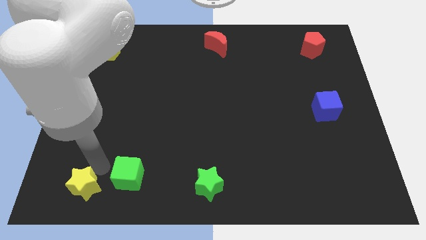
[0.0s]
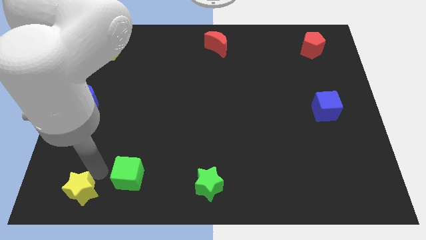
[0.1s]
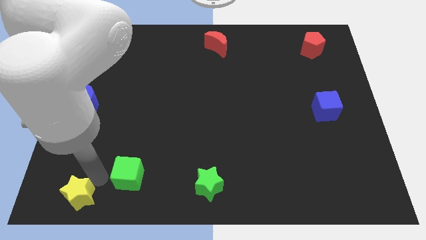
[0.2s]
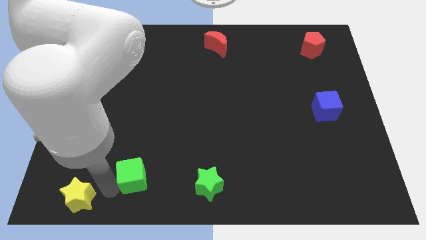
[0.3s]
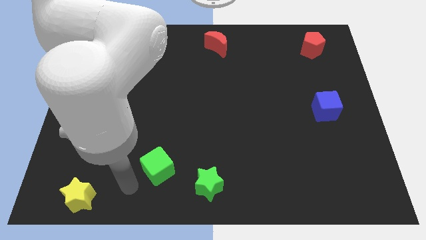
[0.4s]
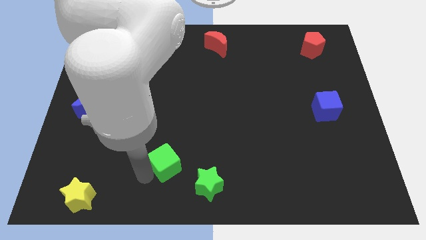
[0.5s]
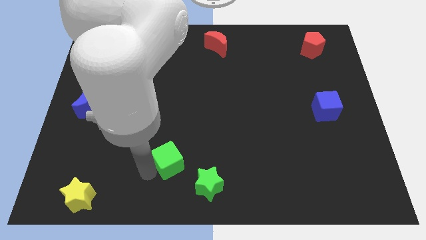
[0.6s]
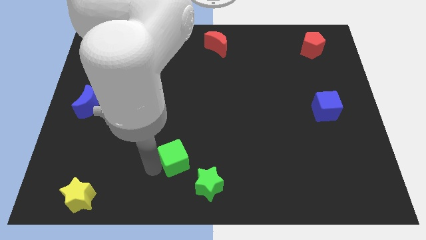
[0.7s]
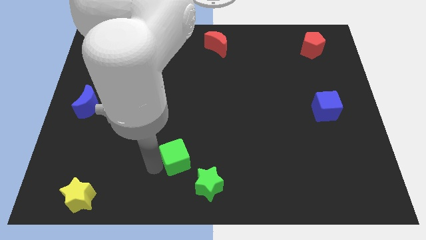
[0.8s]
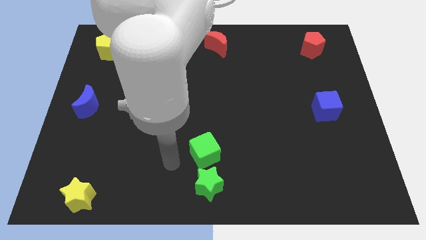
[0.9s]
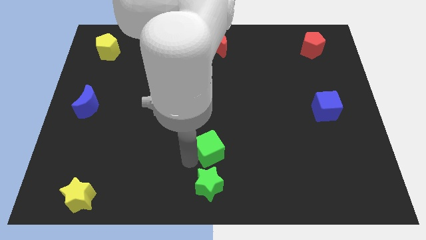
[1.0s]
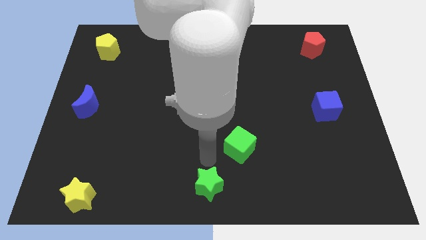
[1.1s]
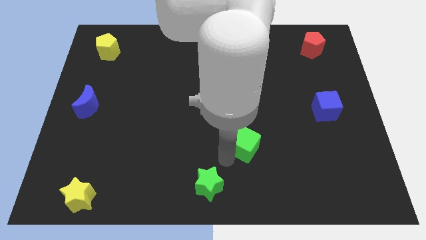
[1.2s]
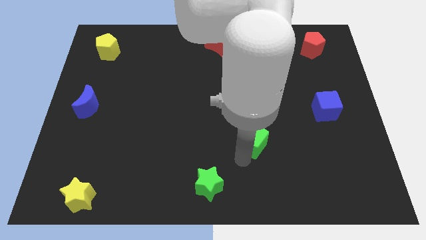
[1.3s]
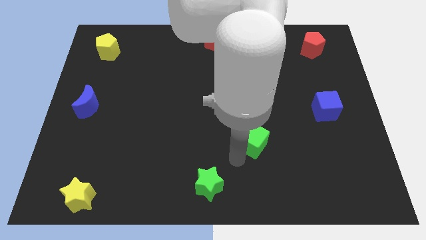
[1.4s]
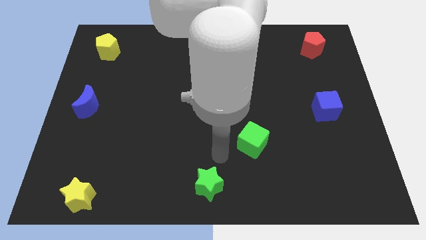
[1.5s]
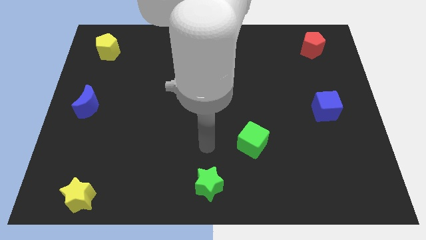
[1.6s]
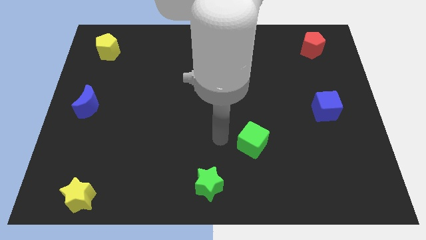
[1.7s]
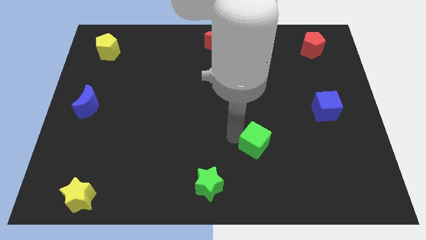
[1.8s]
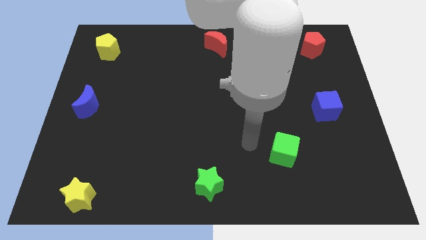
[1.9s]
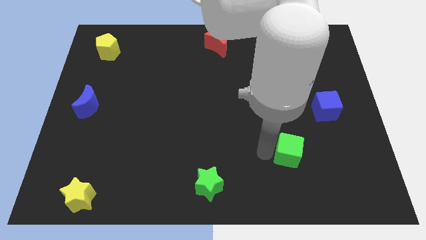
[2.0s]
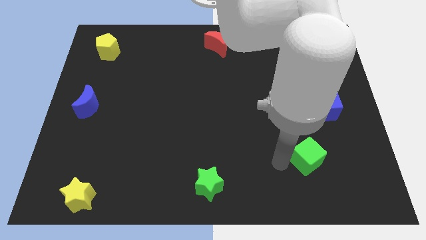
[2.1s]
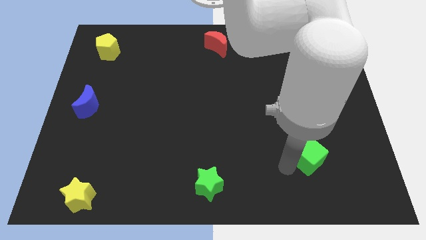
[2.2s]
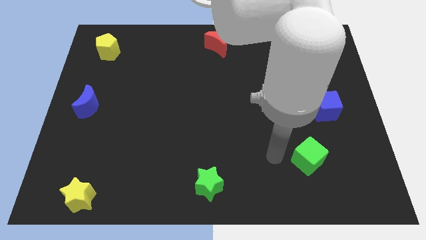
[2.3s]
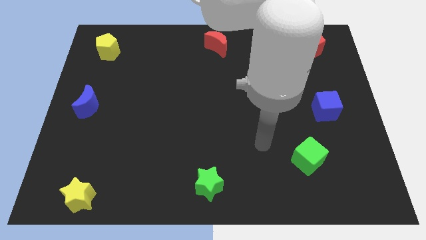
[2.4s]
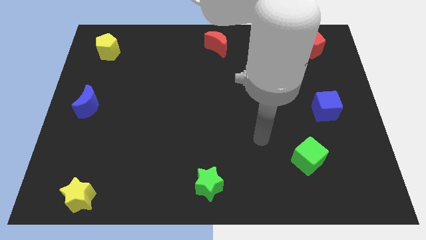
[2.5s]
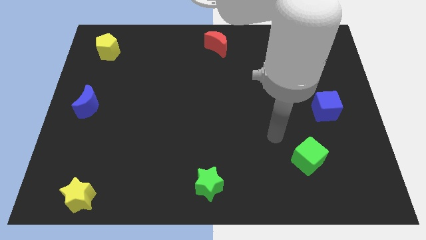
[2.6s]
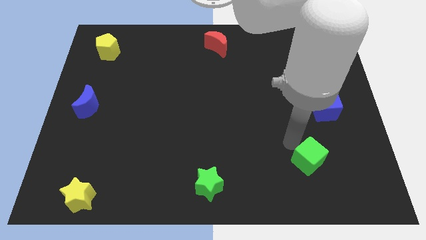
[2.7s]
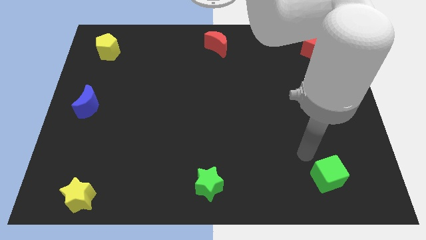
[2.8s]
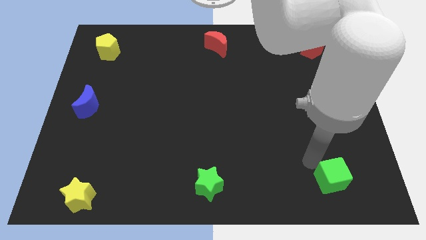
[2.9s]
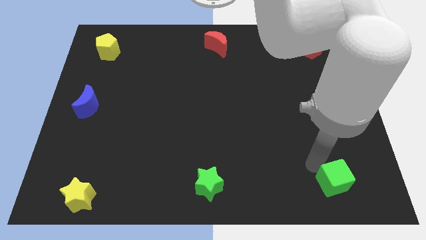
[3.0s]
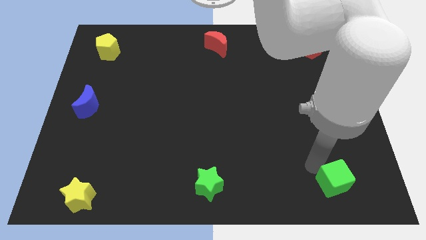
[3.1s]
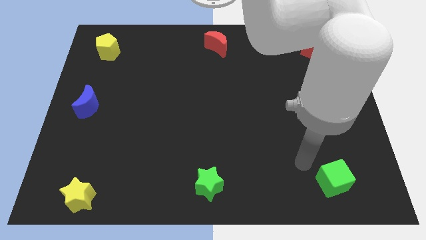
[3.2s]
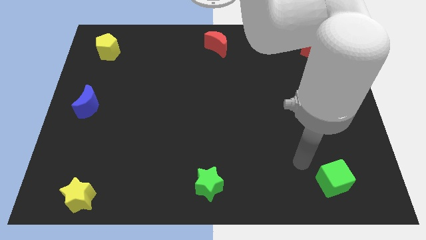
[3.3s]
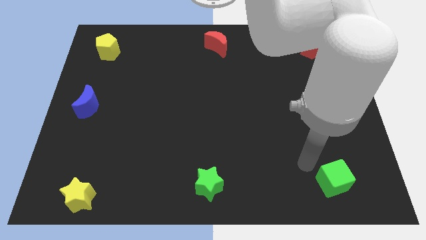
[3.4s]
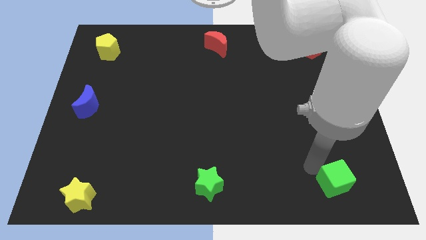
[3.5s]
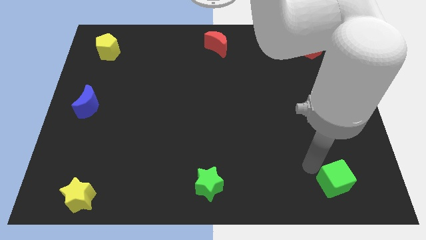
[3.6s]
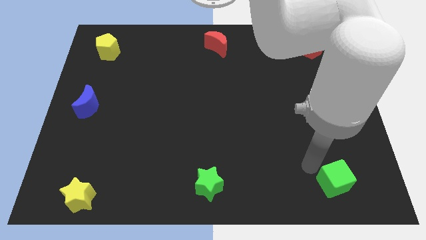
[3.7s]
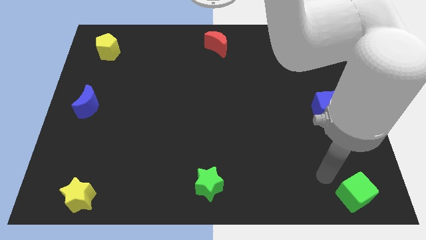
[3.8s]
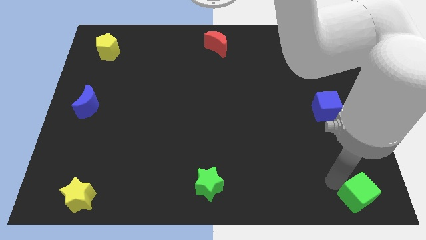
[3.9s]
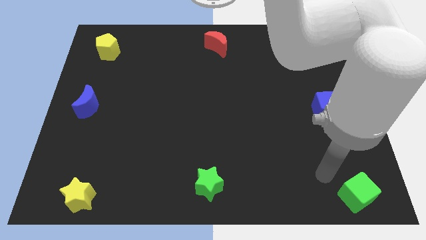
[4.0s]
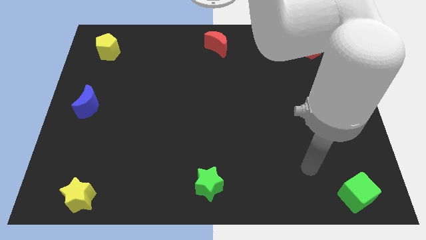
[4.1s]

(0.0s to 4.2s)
move the green cube bottom right corner of the board

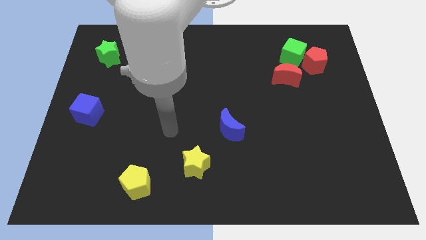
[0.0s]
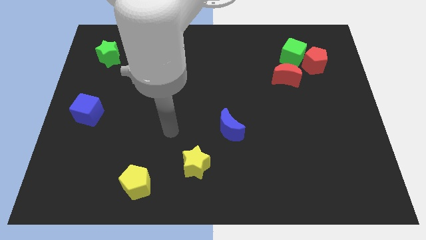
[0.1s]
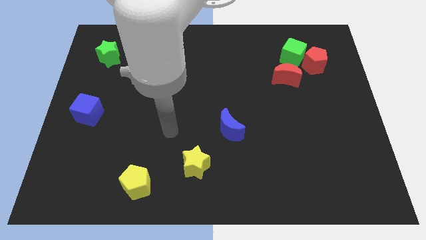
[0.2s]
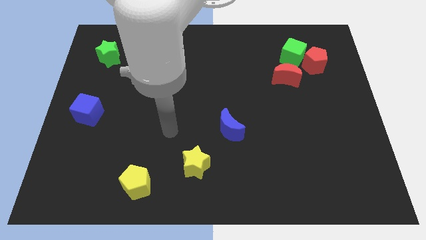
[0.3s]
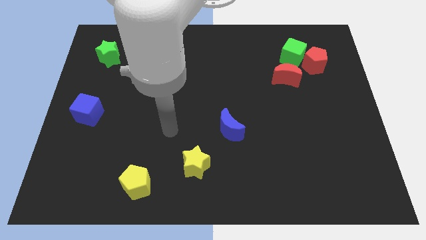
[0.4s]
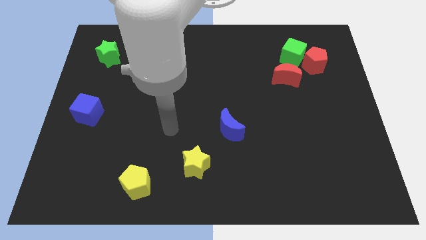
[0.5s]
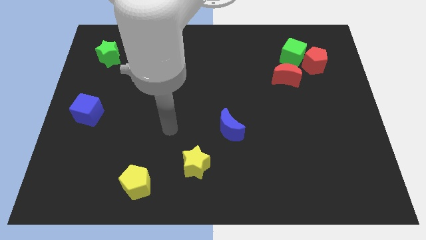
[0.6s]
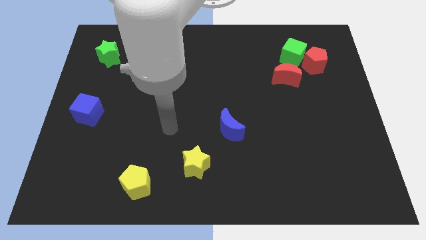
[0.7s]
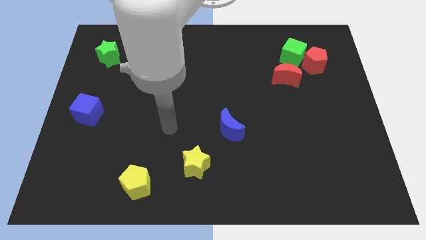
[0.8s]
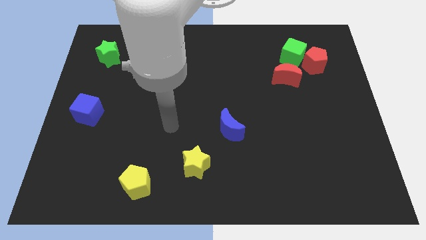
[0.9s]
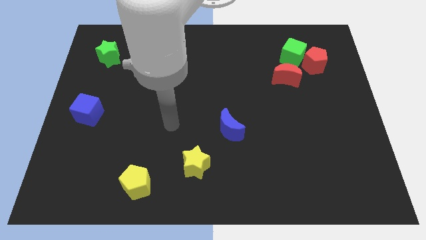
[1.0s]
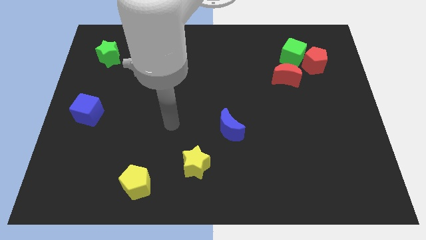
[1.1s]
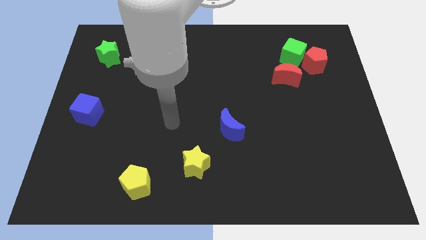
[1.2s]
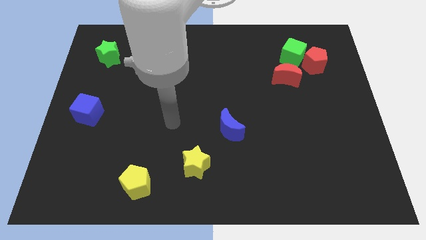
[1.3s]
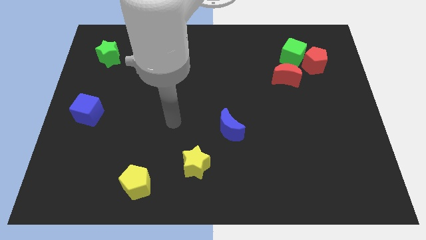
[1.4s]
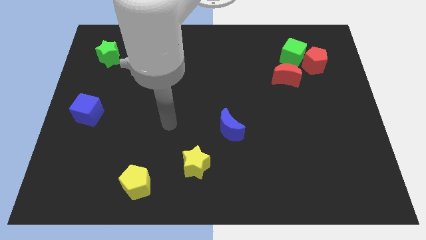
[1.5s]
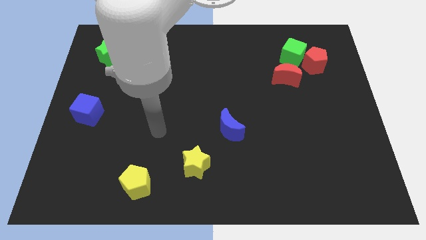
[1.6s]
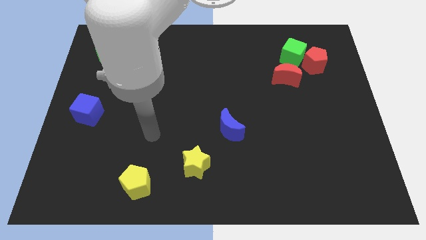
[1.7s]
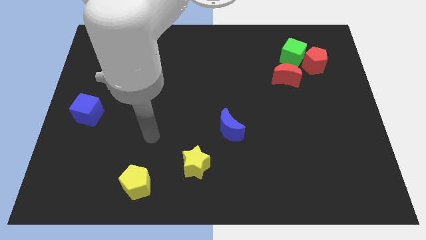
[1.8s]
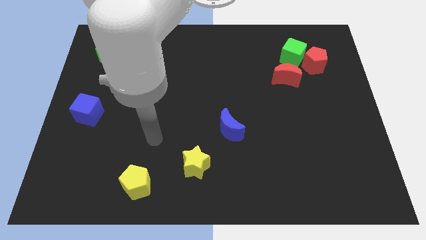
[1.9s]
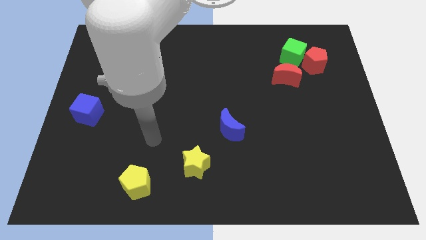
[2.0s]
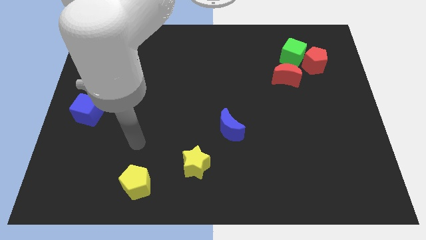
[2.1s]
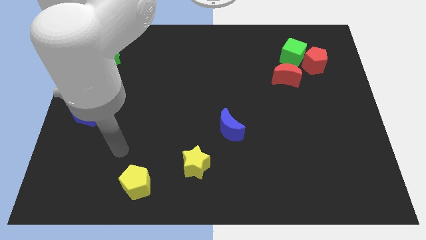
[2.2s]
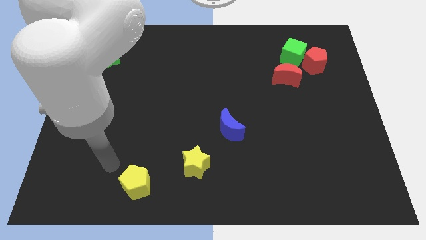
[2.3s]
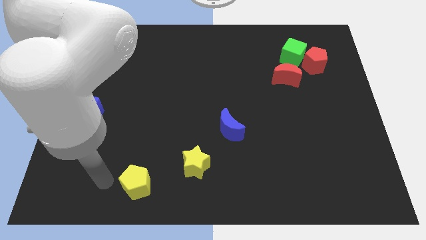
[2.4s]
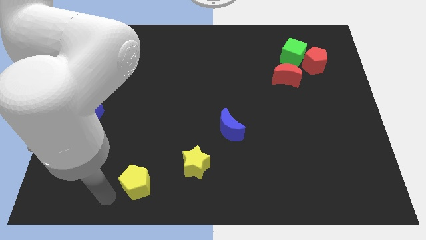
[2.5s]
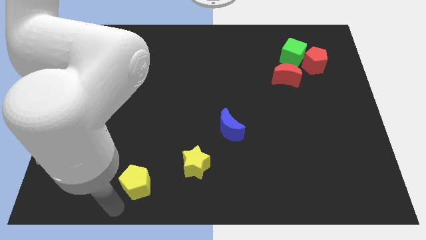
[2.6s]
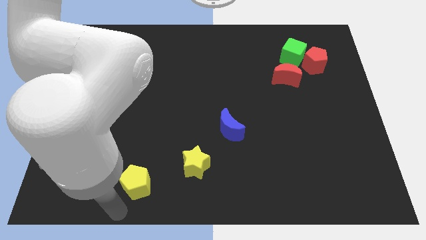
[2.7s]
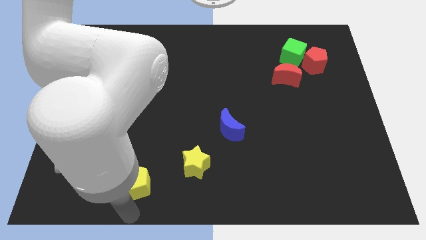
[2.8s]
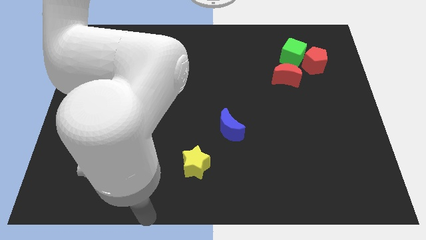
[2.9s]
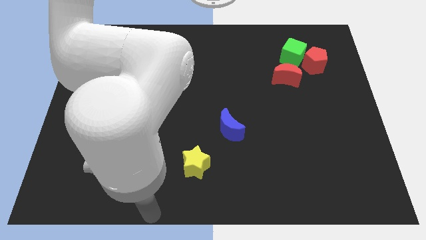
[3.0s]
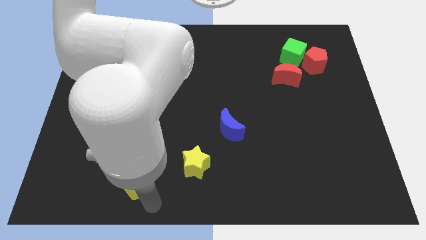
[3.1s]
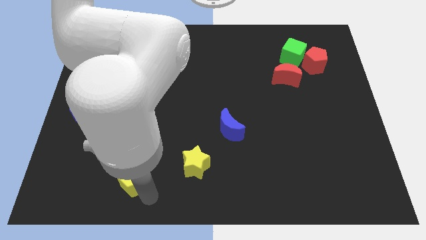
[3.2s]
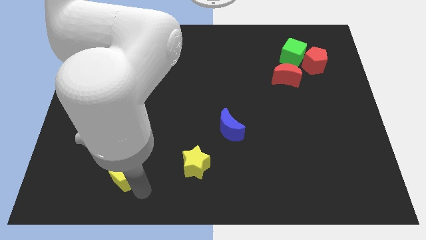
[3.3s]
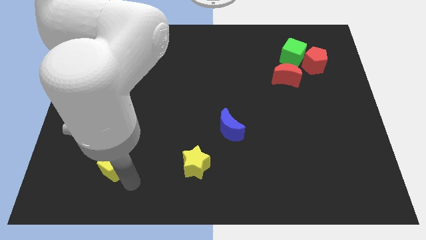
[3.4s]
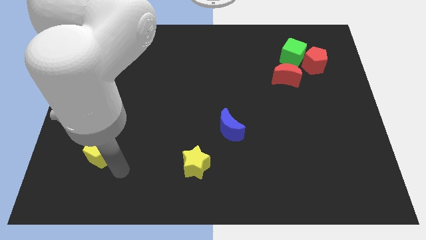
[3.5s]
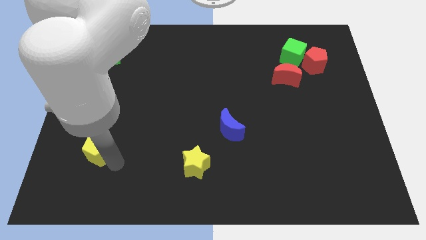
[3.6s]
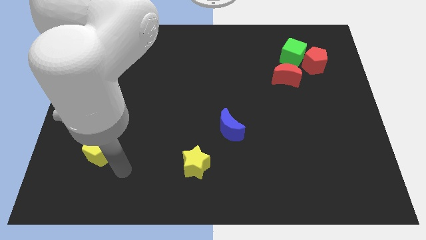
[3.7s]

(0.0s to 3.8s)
push the yellow pentagon towards the left side of the board

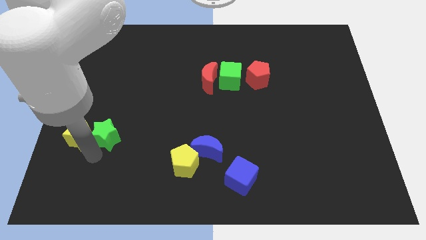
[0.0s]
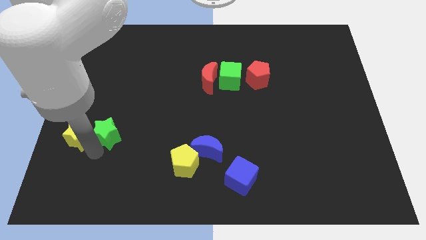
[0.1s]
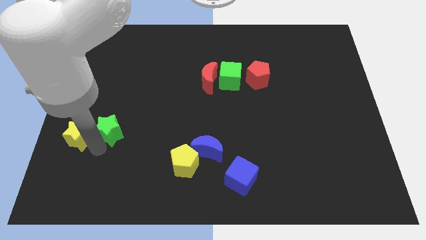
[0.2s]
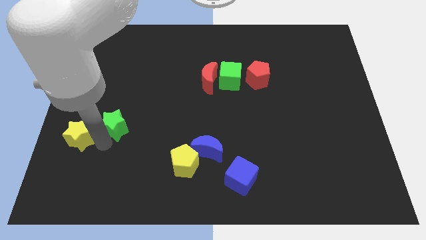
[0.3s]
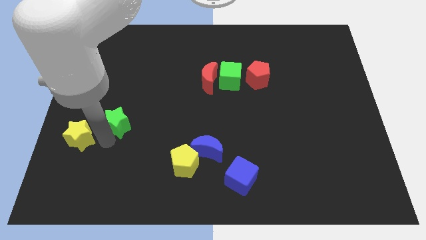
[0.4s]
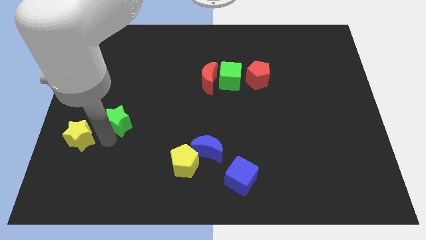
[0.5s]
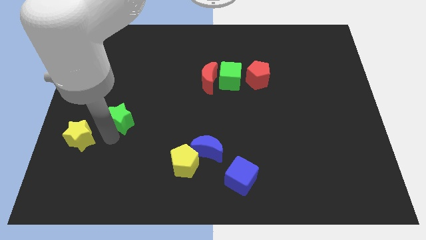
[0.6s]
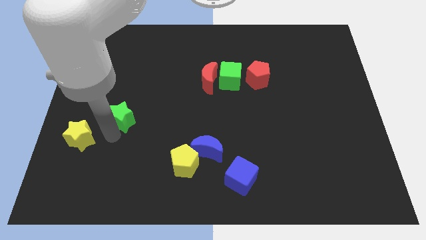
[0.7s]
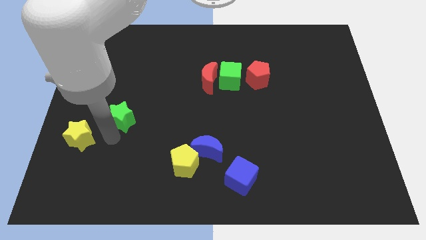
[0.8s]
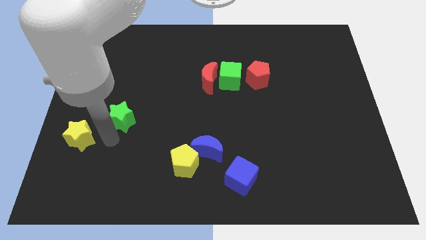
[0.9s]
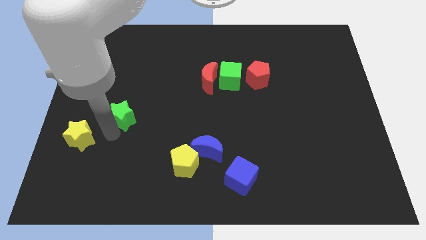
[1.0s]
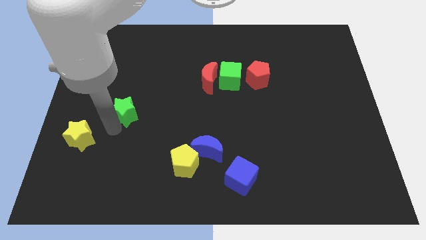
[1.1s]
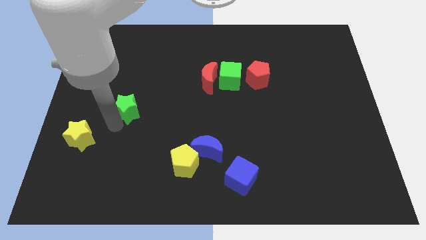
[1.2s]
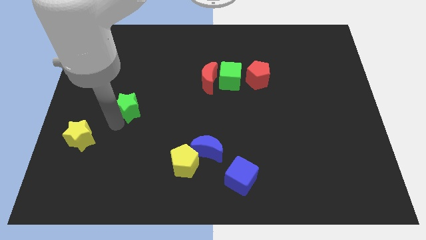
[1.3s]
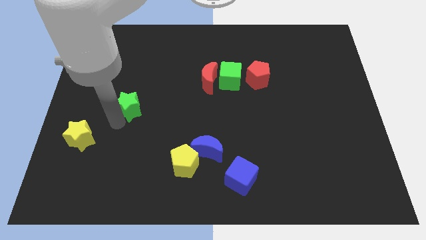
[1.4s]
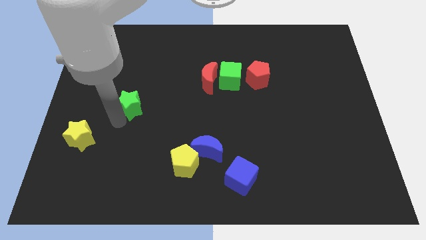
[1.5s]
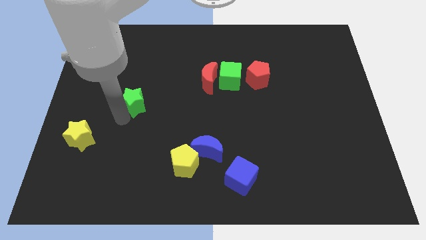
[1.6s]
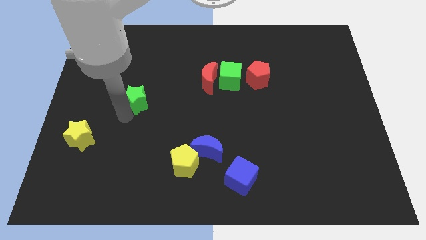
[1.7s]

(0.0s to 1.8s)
move the green star diagonally on the top right side of the yellow star
